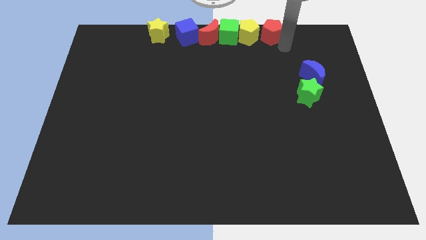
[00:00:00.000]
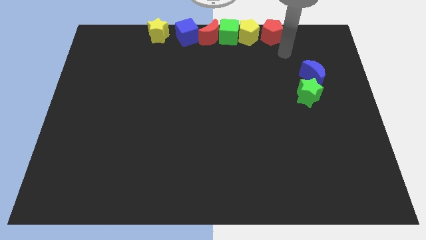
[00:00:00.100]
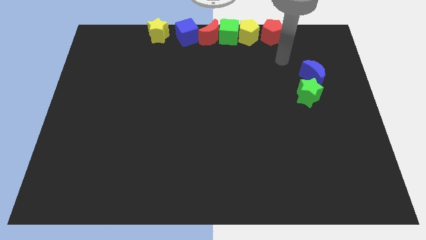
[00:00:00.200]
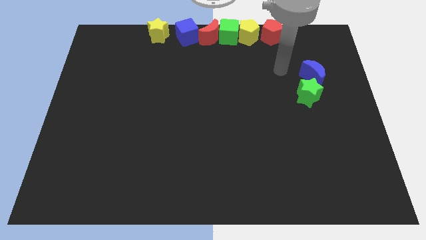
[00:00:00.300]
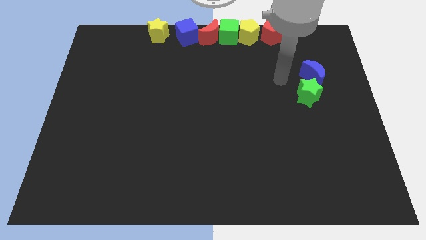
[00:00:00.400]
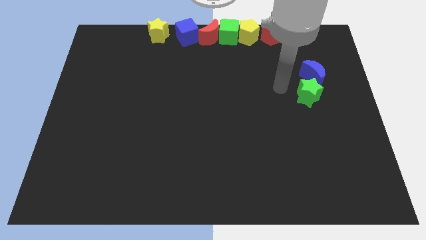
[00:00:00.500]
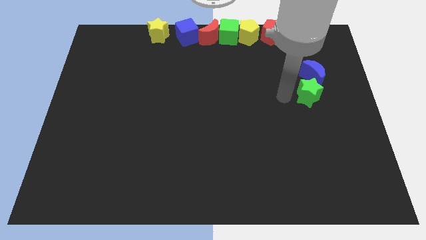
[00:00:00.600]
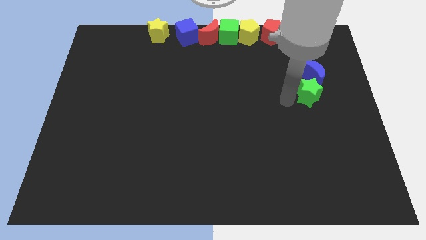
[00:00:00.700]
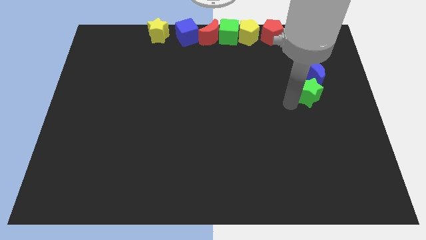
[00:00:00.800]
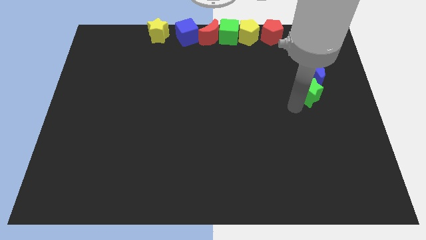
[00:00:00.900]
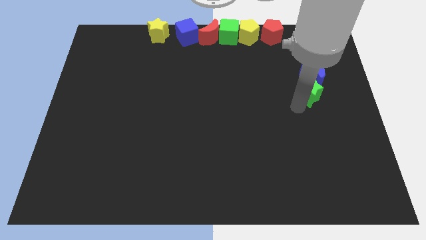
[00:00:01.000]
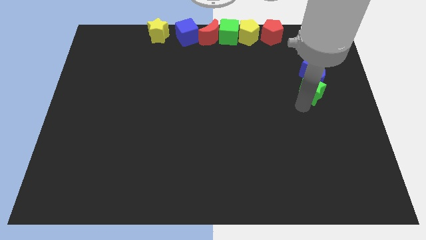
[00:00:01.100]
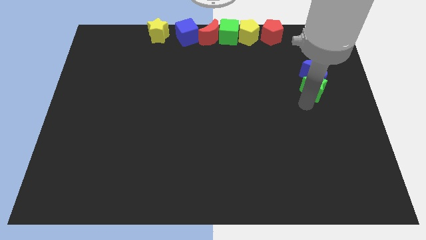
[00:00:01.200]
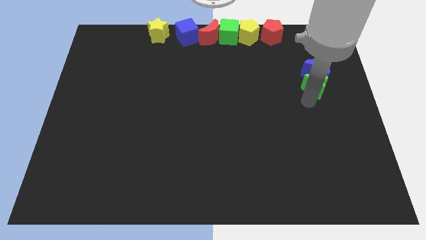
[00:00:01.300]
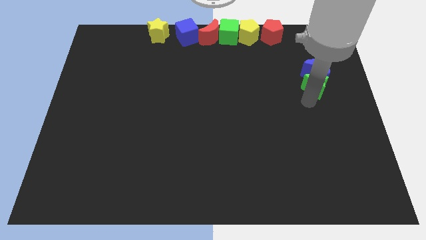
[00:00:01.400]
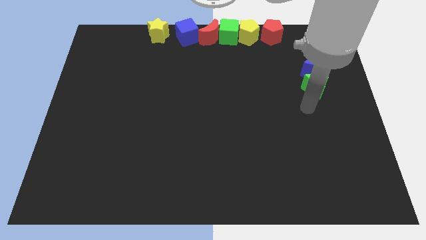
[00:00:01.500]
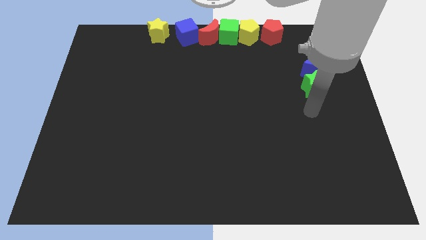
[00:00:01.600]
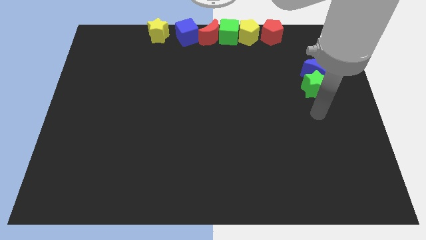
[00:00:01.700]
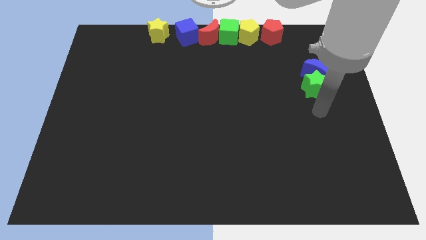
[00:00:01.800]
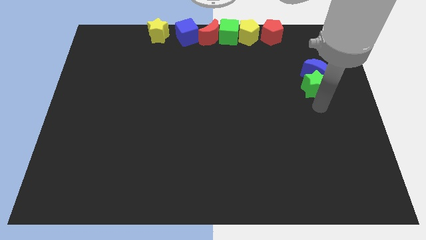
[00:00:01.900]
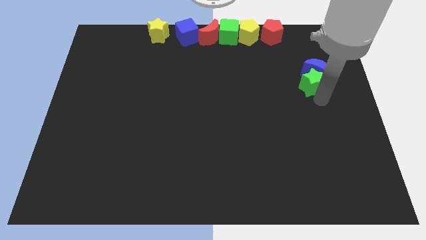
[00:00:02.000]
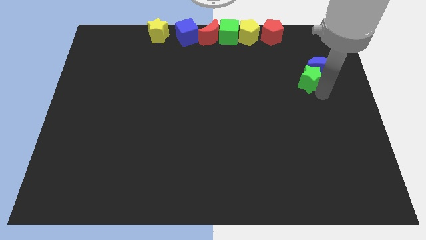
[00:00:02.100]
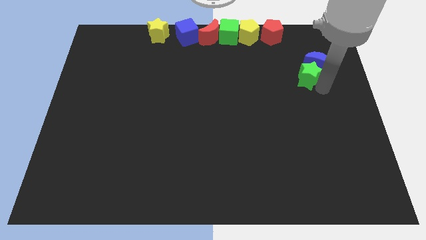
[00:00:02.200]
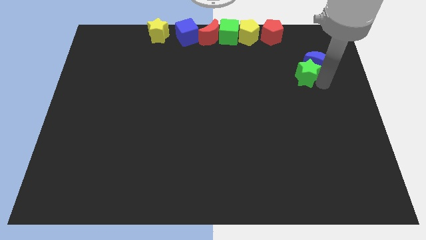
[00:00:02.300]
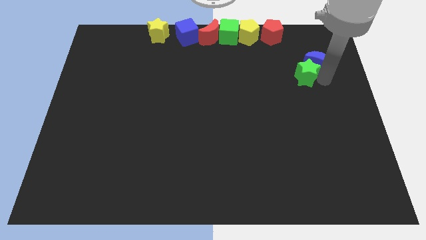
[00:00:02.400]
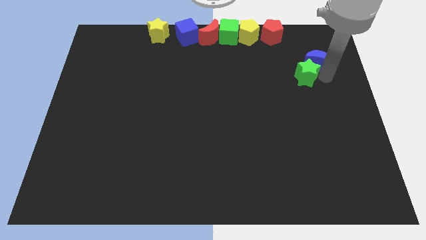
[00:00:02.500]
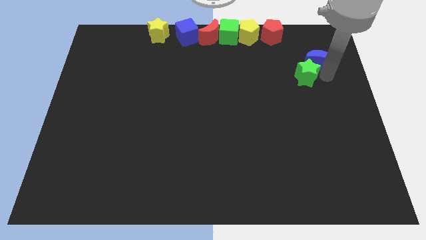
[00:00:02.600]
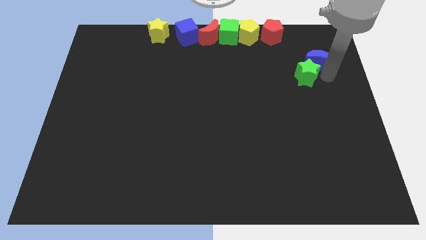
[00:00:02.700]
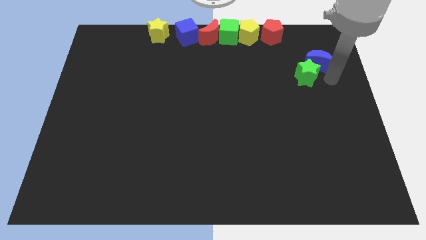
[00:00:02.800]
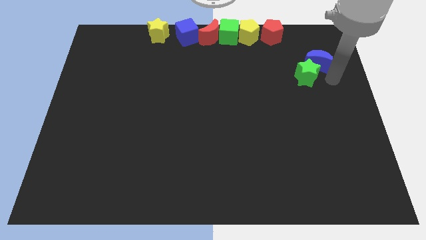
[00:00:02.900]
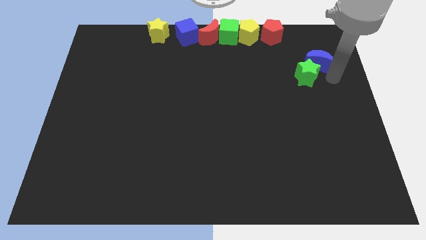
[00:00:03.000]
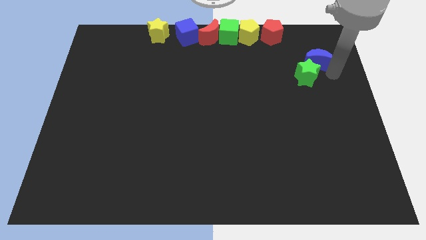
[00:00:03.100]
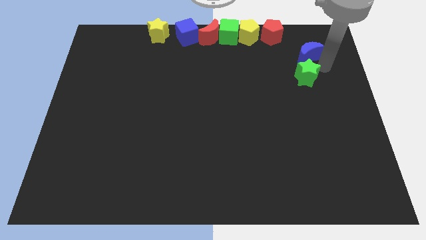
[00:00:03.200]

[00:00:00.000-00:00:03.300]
move the blue moon and green star upwards slightly

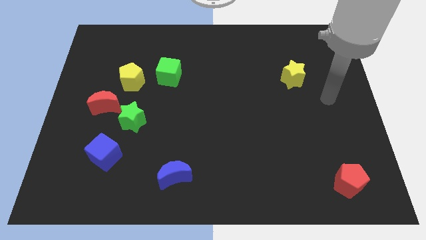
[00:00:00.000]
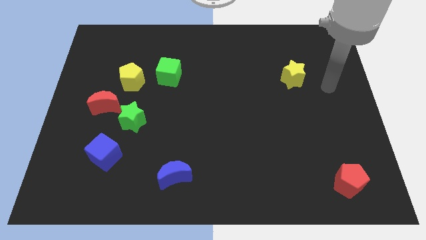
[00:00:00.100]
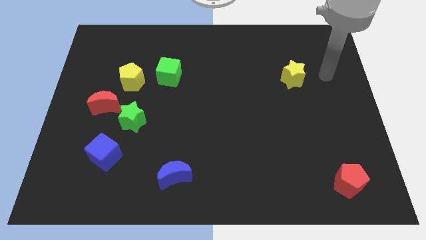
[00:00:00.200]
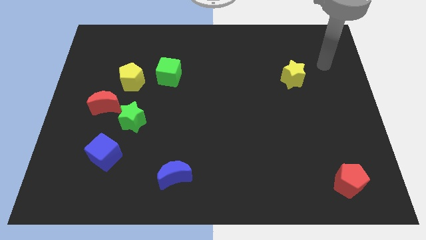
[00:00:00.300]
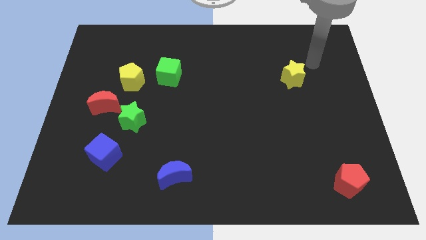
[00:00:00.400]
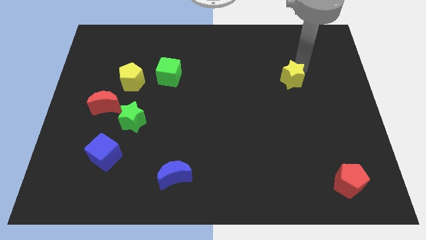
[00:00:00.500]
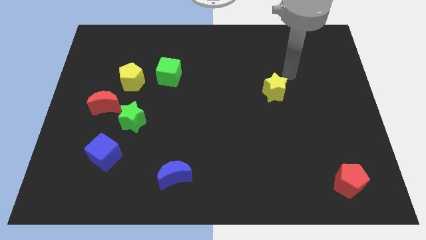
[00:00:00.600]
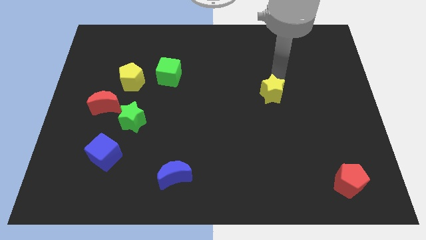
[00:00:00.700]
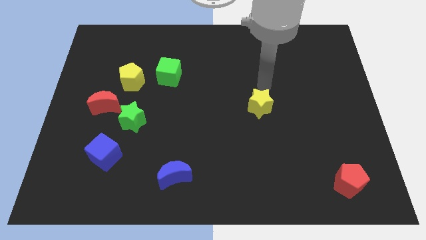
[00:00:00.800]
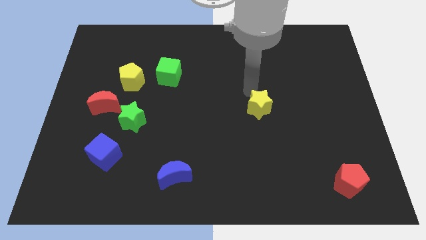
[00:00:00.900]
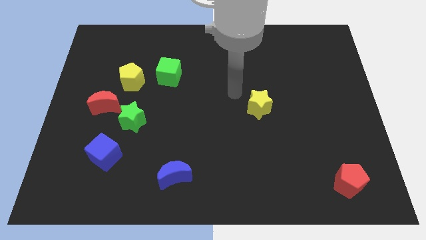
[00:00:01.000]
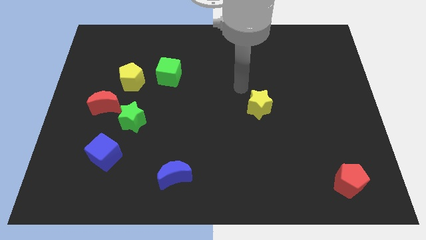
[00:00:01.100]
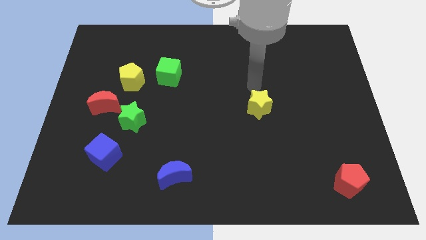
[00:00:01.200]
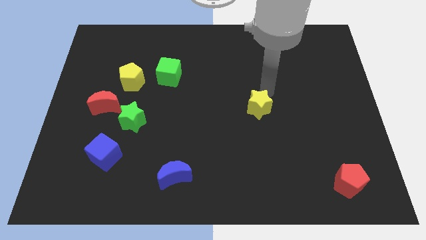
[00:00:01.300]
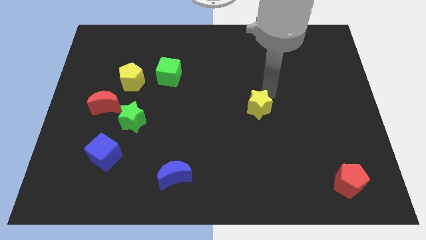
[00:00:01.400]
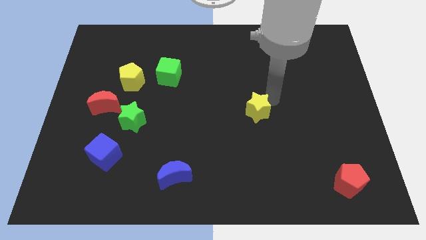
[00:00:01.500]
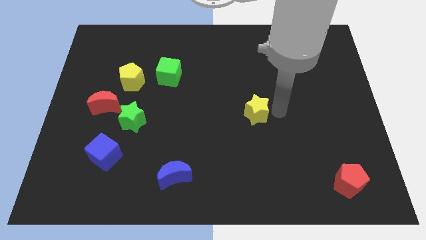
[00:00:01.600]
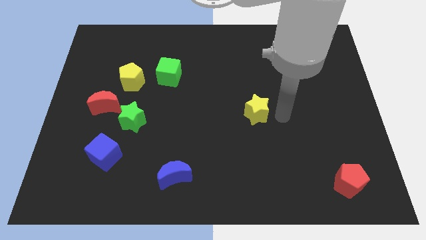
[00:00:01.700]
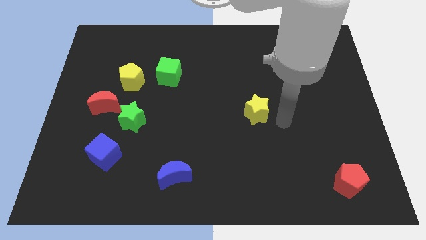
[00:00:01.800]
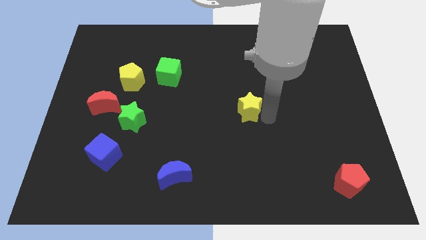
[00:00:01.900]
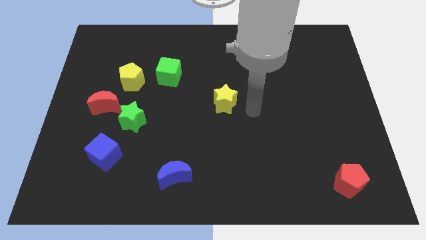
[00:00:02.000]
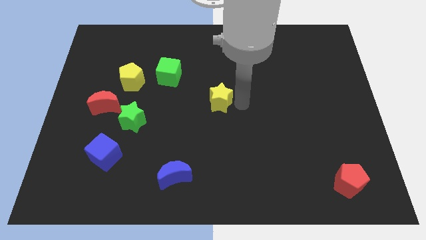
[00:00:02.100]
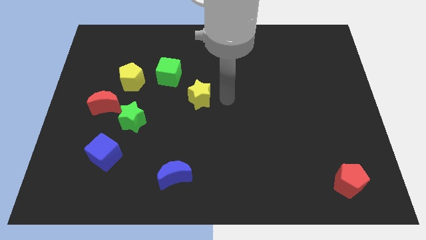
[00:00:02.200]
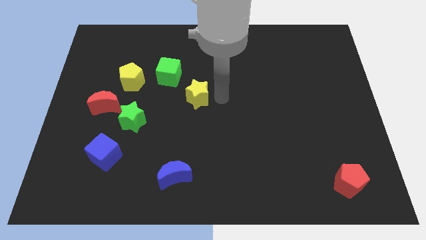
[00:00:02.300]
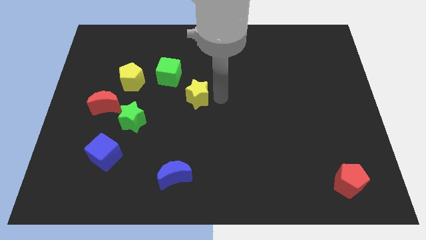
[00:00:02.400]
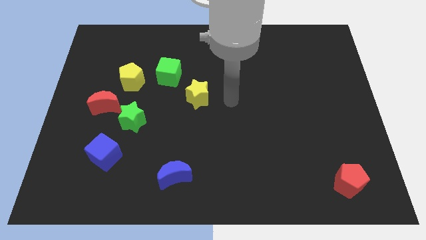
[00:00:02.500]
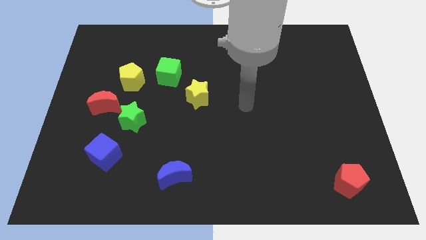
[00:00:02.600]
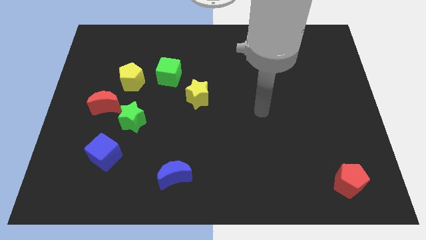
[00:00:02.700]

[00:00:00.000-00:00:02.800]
place the yellow star diagonally top right to the green star

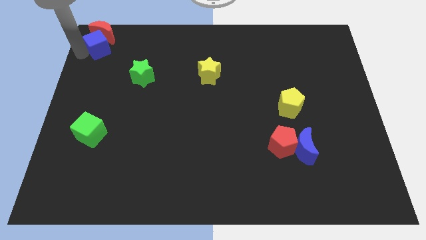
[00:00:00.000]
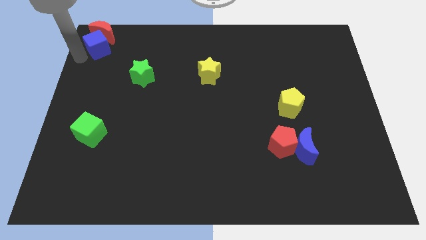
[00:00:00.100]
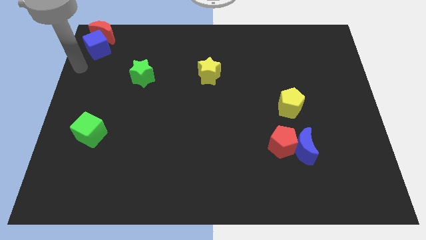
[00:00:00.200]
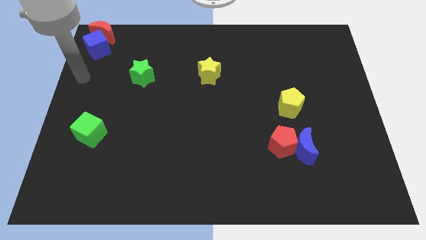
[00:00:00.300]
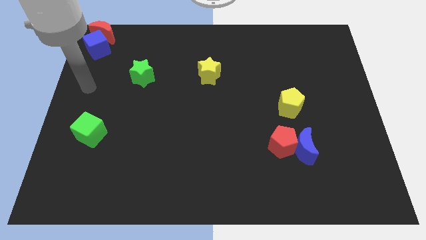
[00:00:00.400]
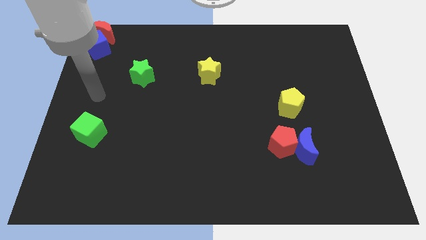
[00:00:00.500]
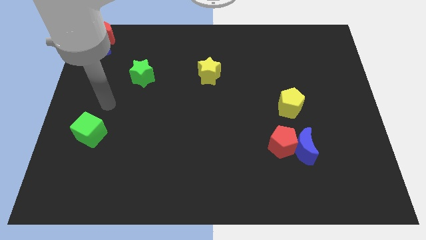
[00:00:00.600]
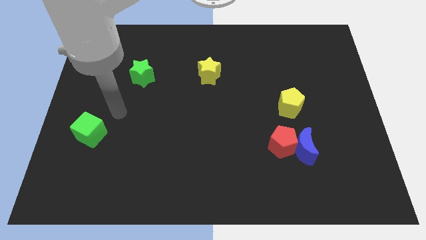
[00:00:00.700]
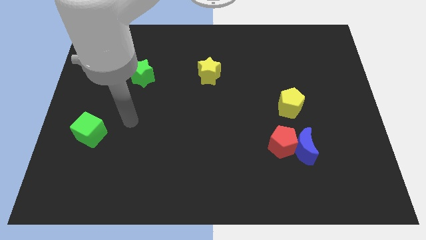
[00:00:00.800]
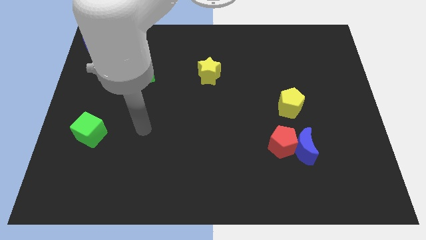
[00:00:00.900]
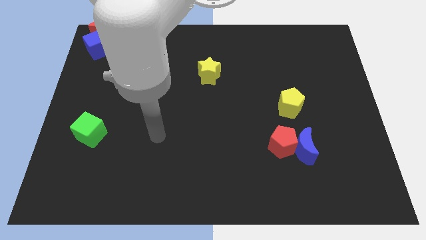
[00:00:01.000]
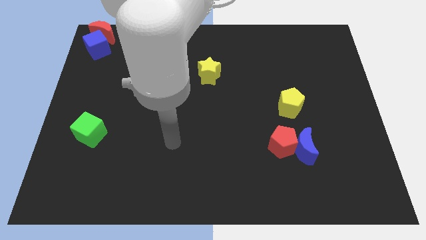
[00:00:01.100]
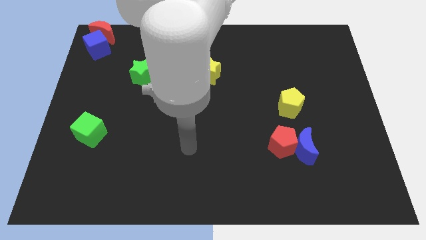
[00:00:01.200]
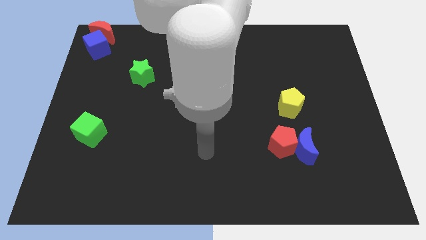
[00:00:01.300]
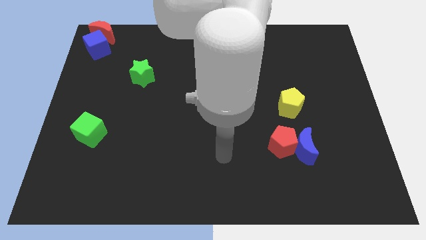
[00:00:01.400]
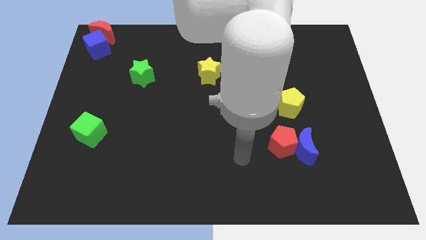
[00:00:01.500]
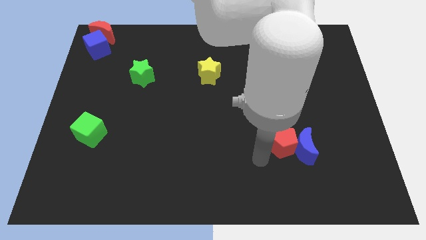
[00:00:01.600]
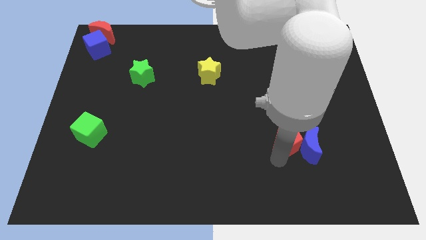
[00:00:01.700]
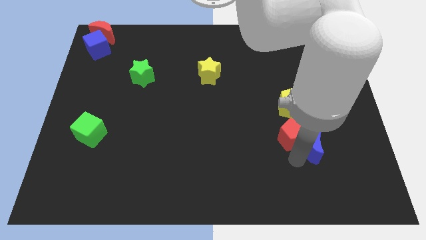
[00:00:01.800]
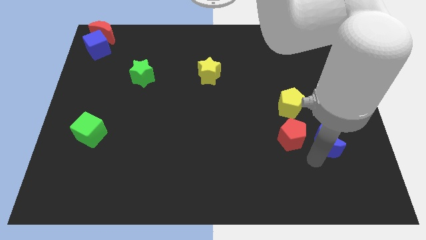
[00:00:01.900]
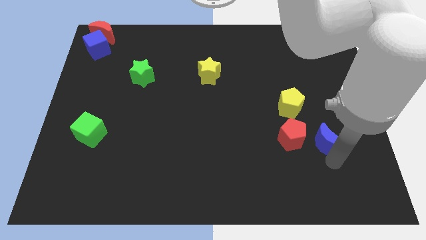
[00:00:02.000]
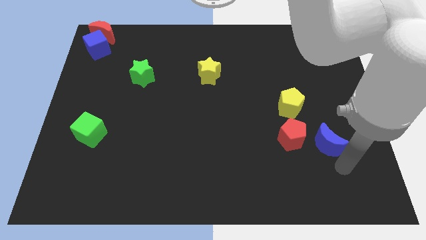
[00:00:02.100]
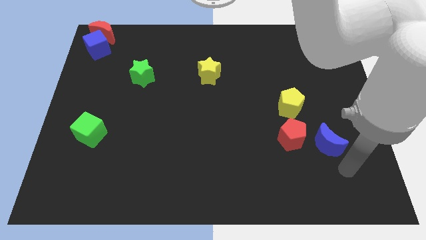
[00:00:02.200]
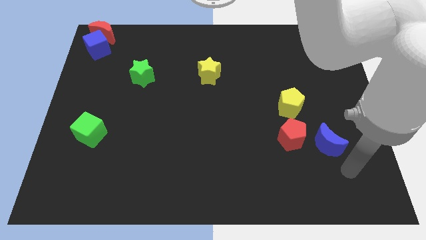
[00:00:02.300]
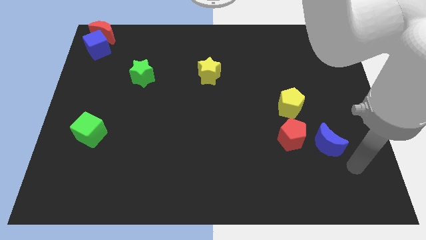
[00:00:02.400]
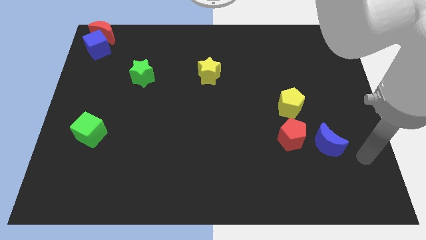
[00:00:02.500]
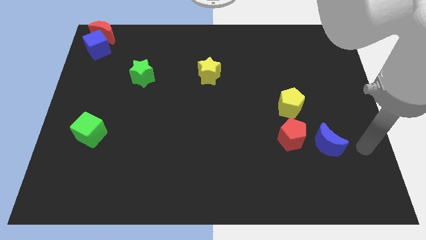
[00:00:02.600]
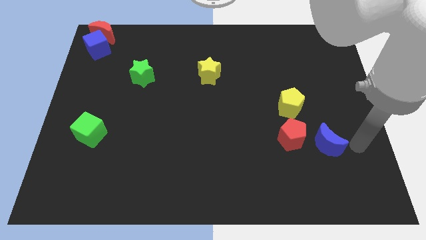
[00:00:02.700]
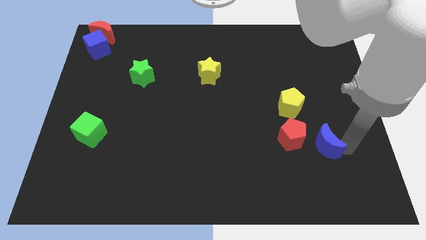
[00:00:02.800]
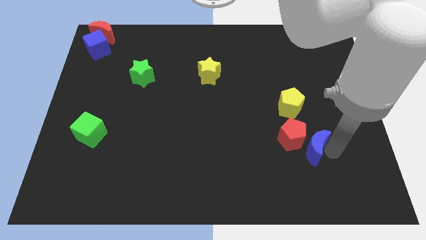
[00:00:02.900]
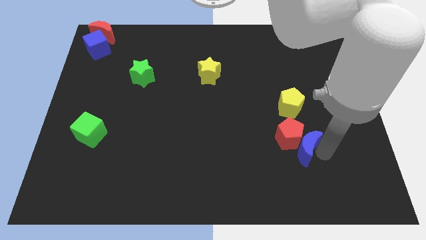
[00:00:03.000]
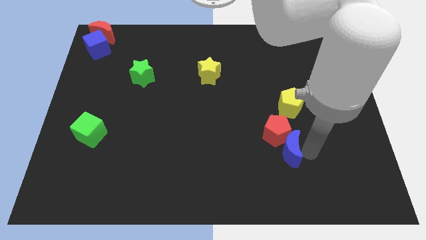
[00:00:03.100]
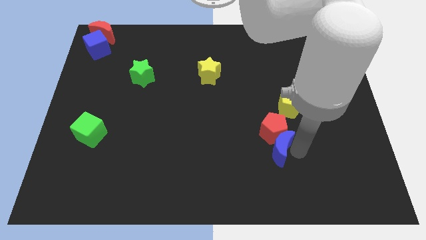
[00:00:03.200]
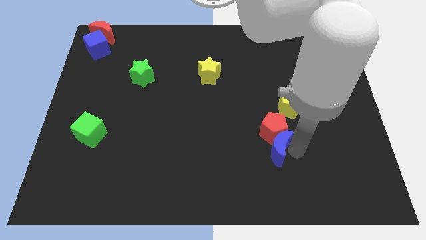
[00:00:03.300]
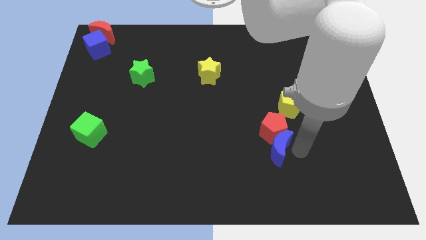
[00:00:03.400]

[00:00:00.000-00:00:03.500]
push the blue moon into the red pentagon
